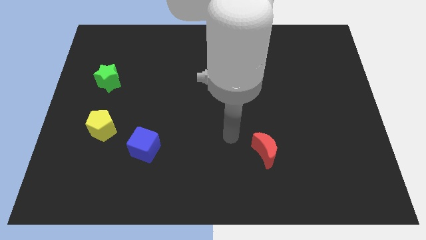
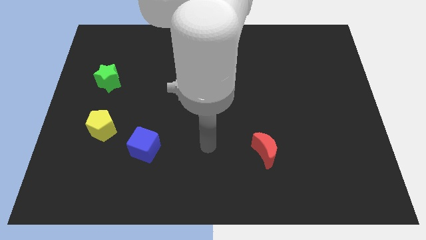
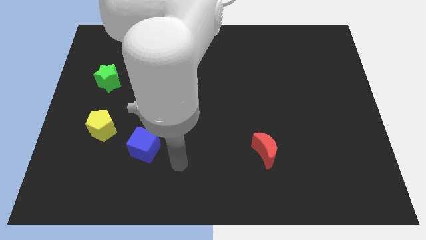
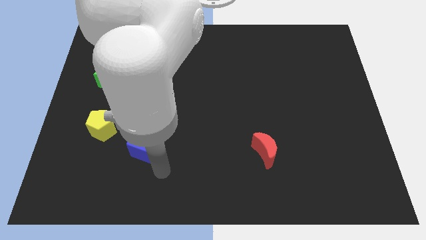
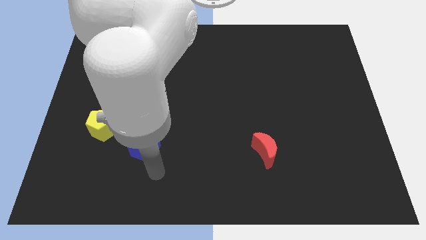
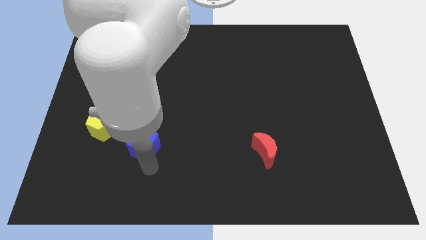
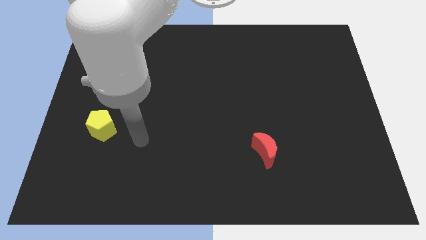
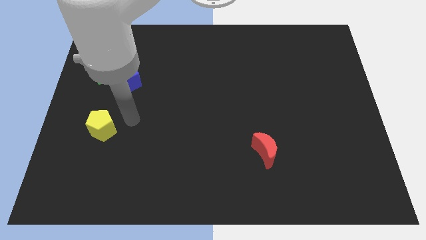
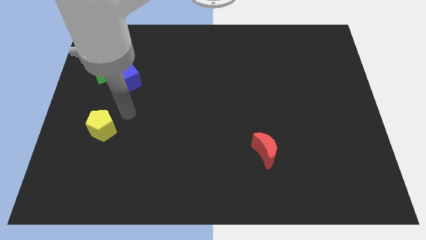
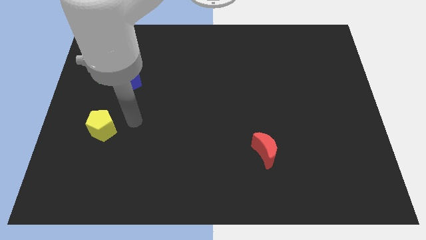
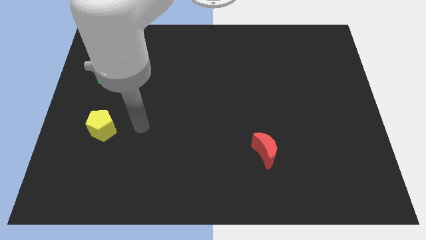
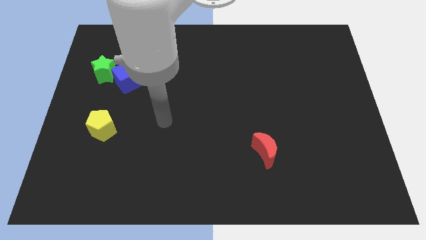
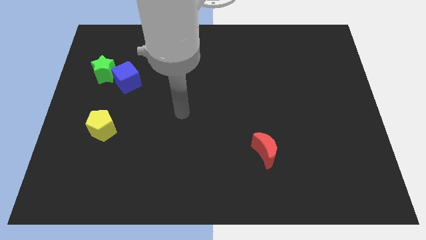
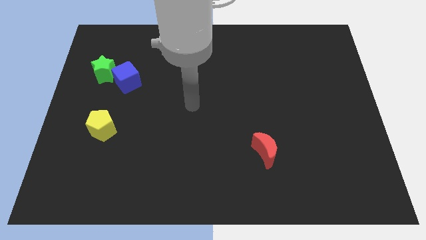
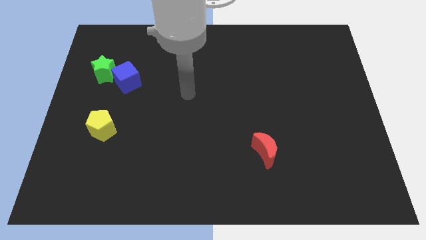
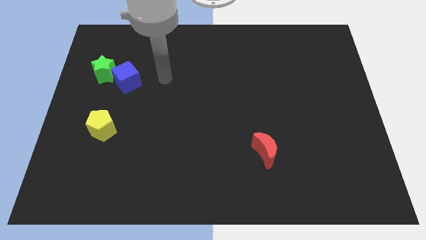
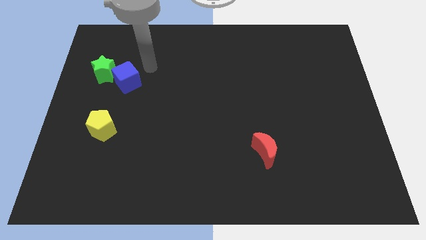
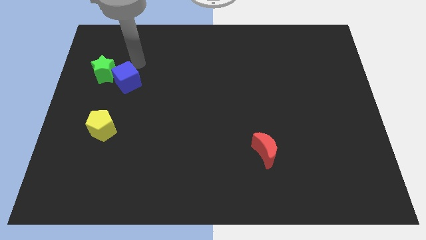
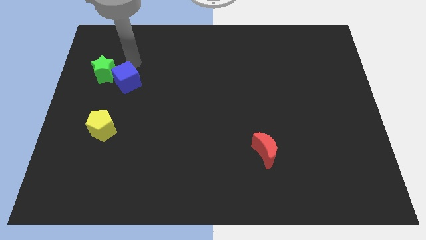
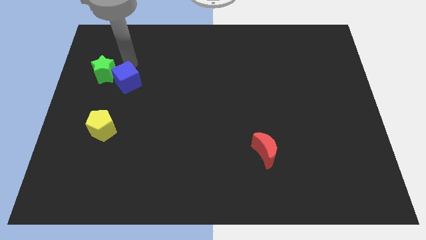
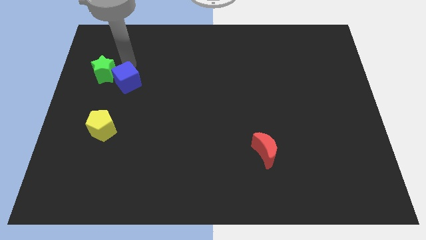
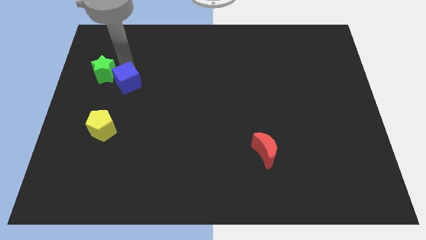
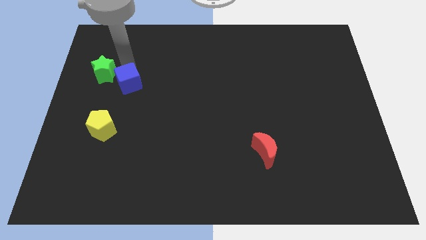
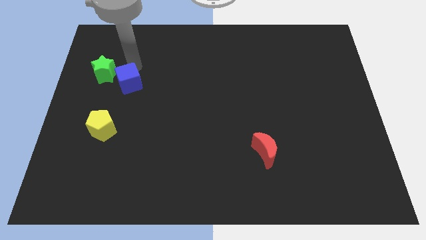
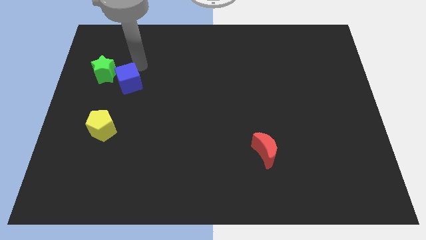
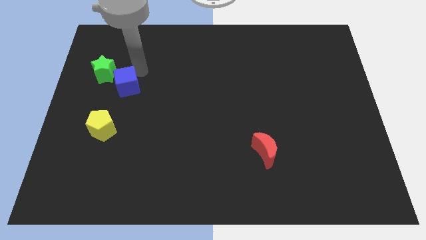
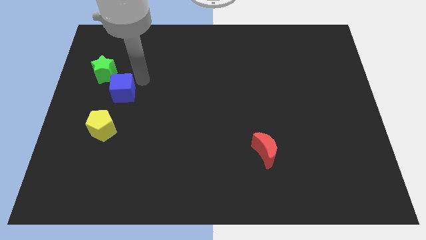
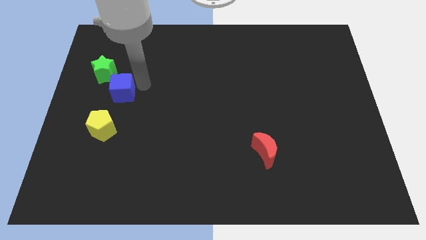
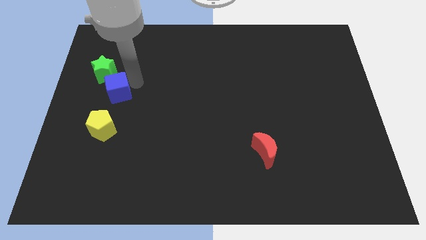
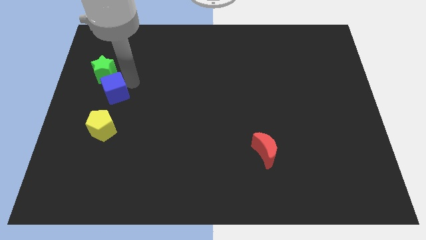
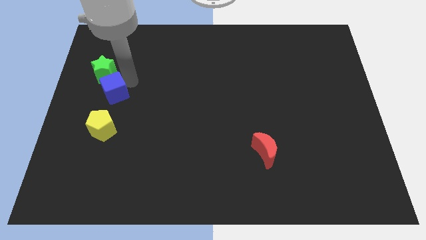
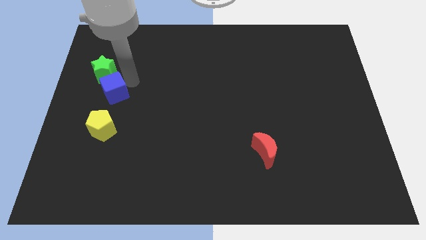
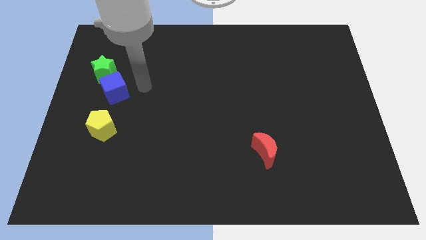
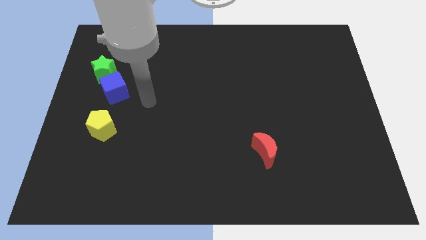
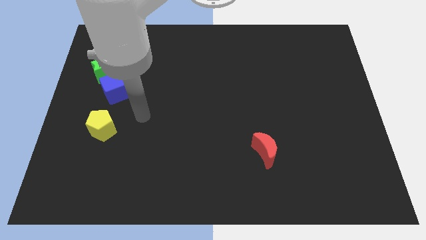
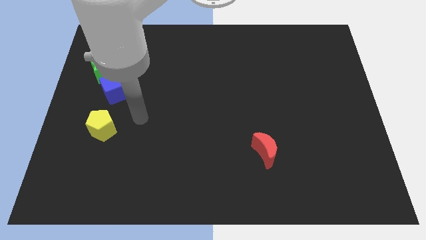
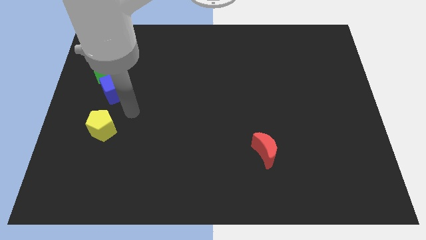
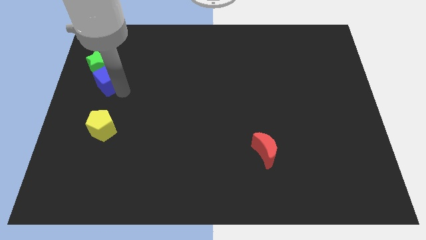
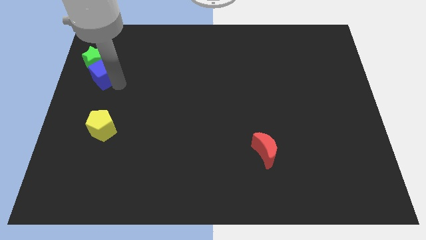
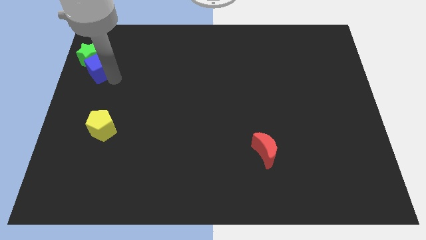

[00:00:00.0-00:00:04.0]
push the blue cube towards the star

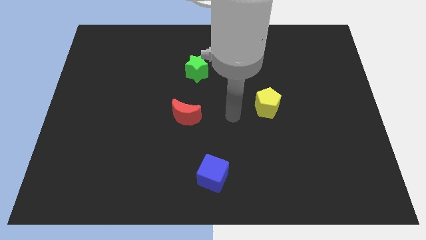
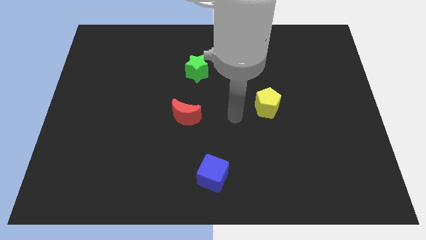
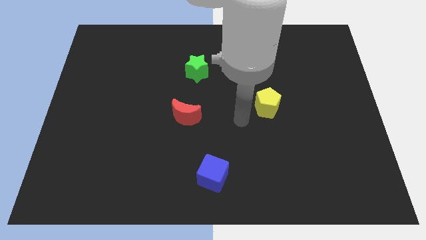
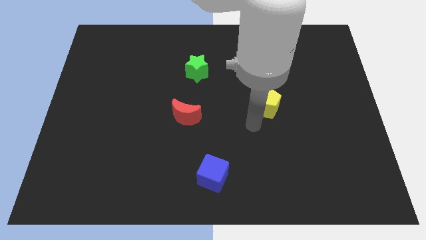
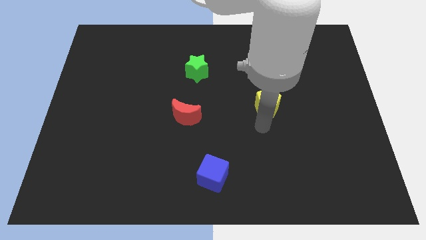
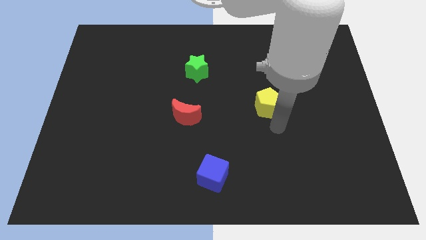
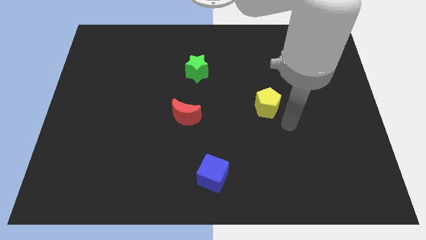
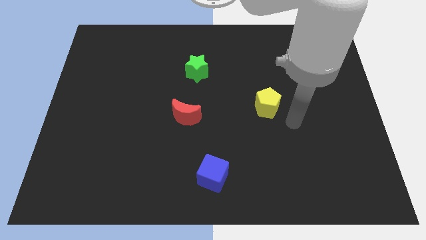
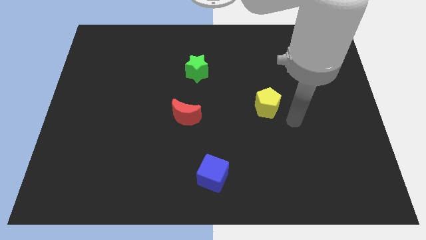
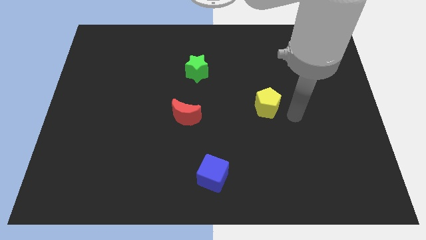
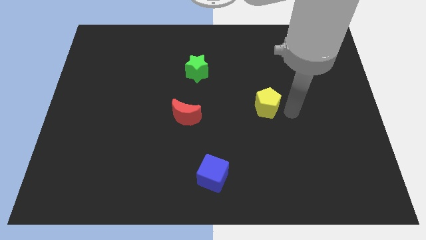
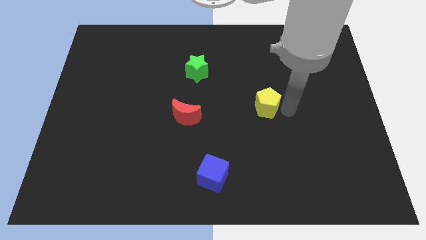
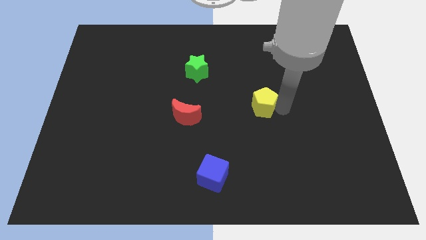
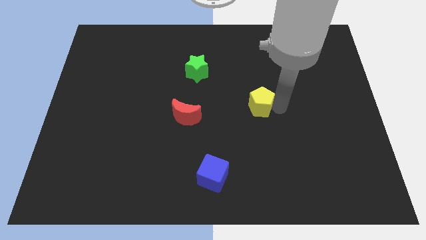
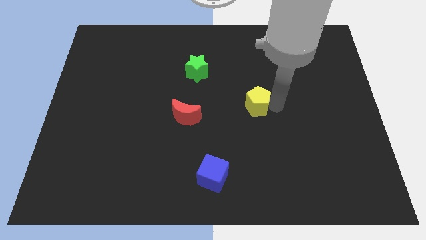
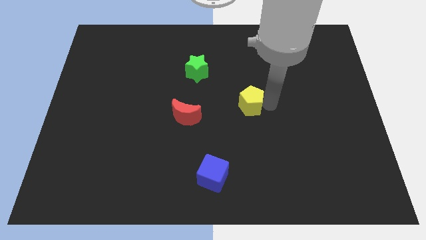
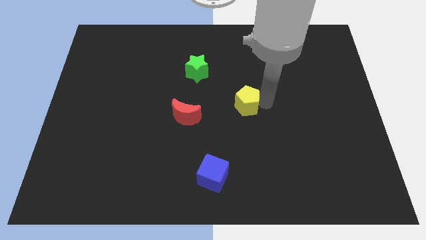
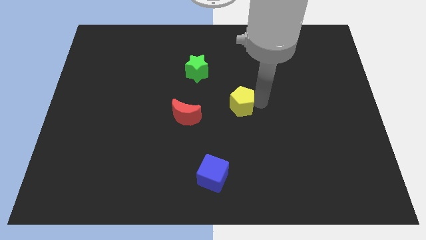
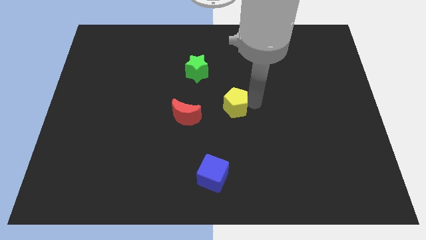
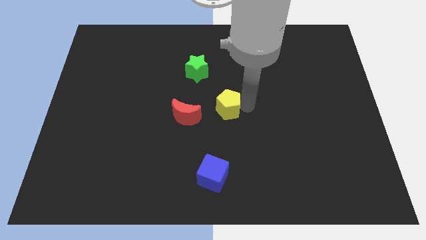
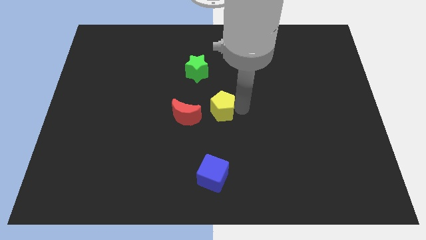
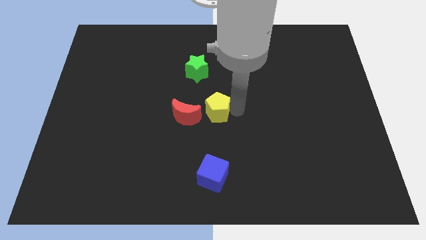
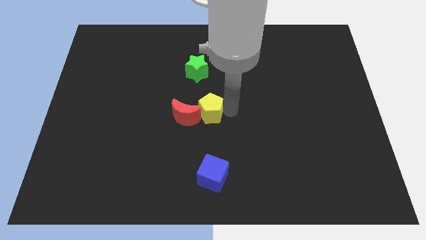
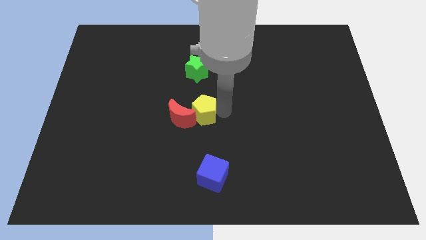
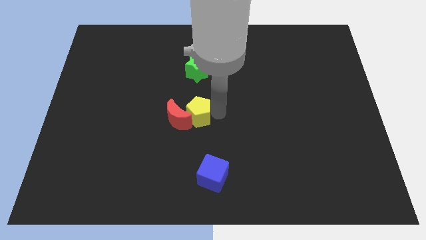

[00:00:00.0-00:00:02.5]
slide the pentagon next to the red moon

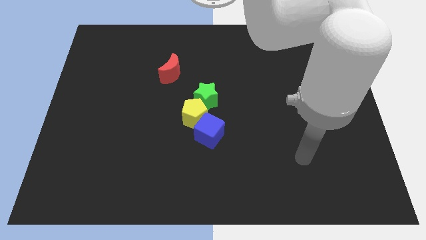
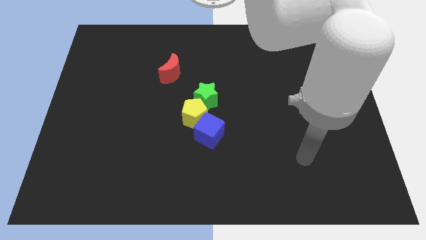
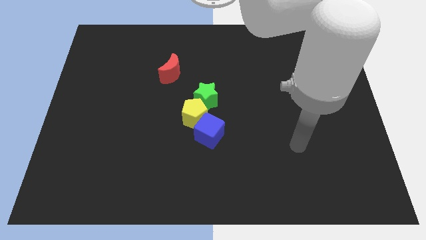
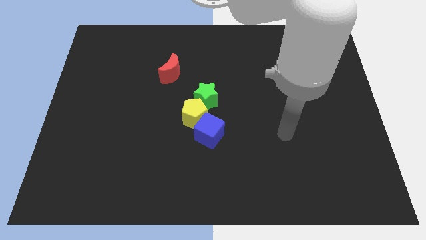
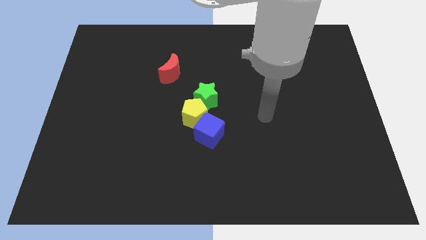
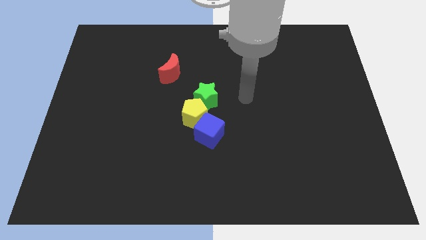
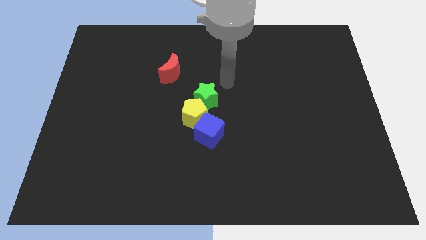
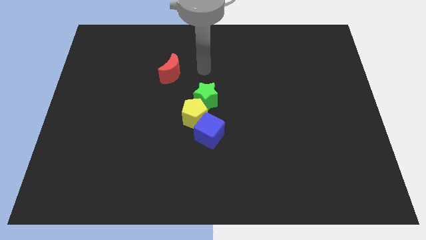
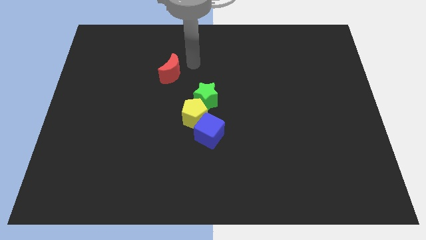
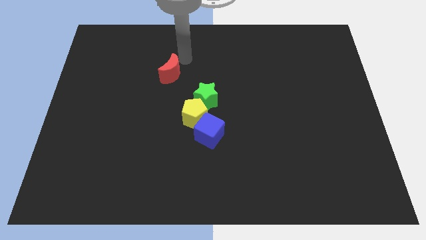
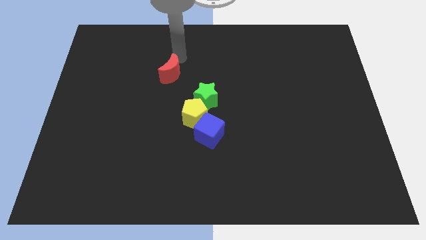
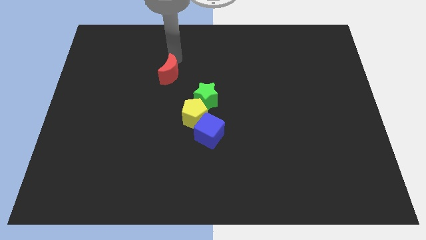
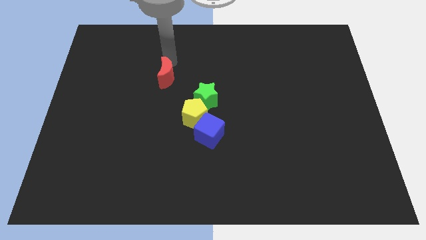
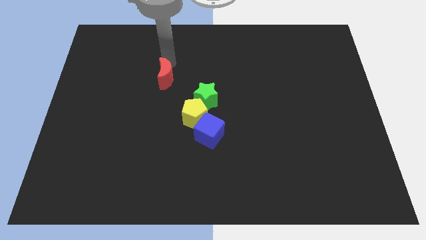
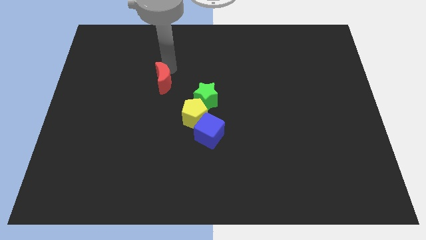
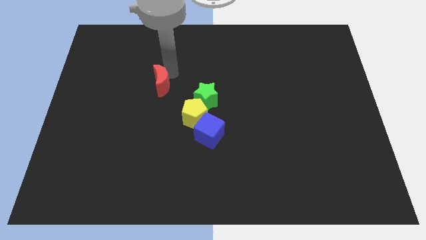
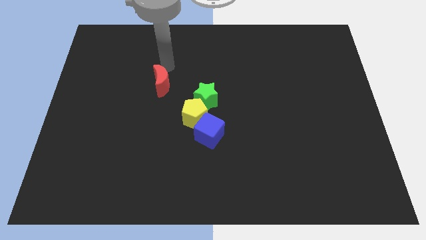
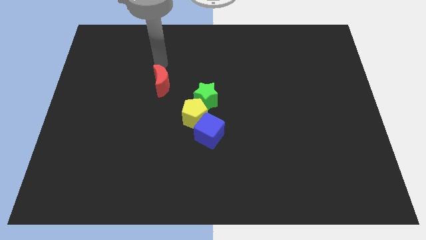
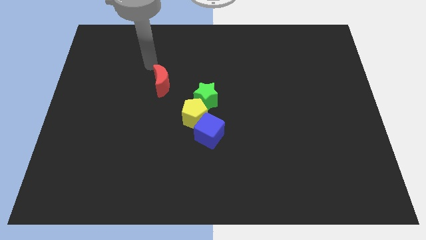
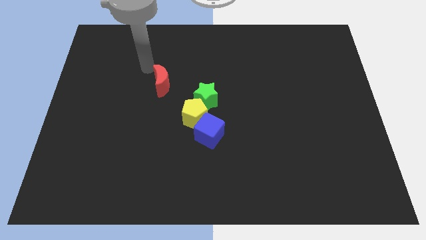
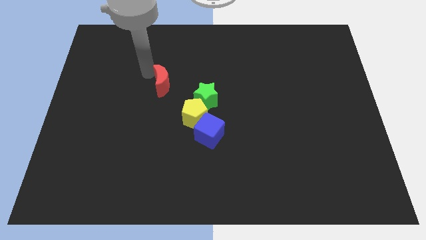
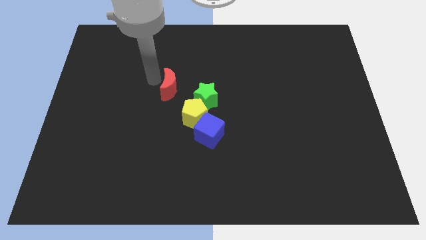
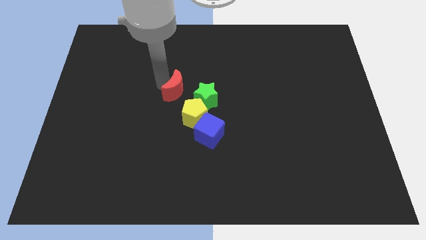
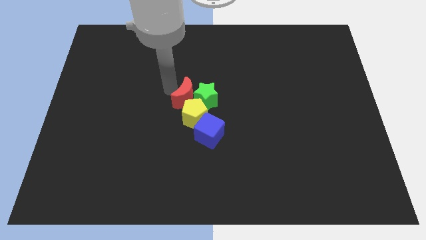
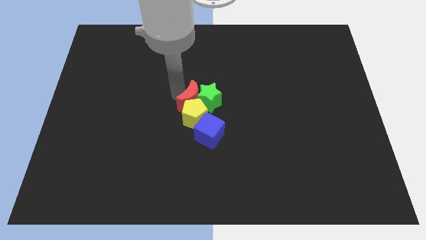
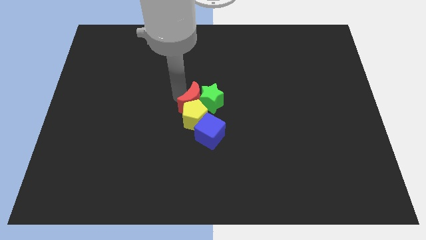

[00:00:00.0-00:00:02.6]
push the red block next to the yellow pentagon
